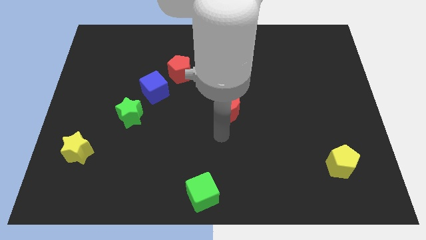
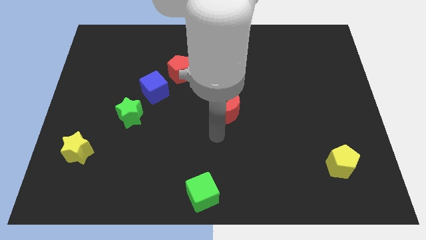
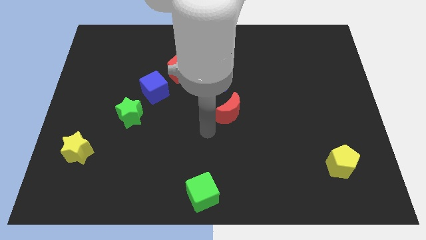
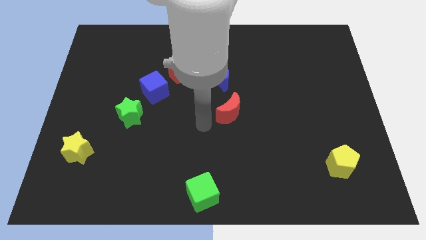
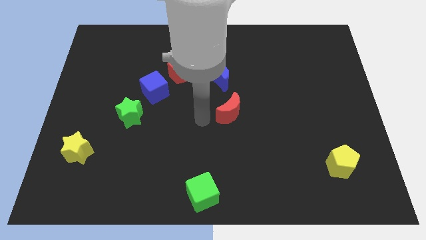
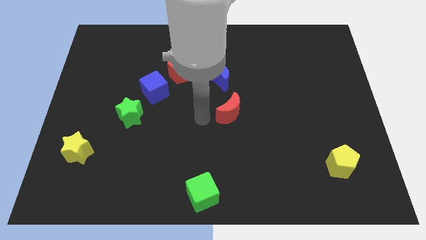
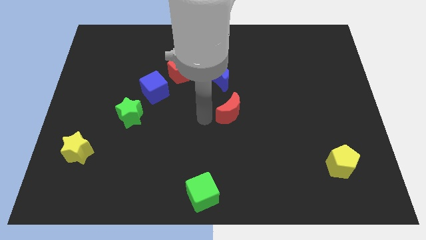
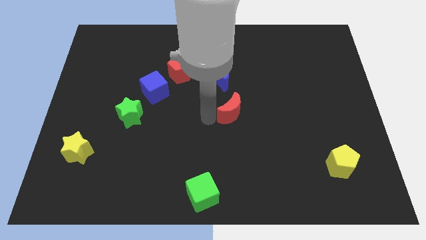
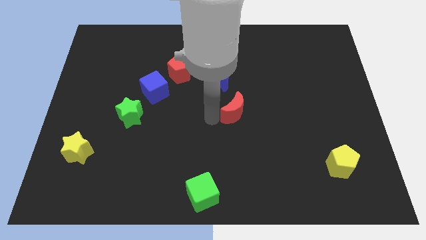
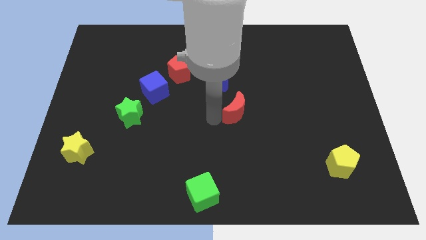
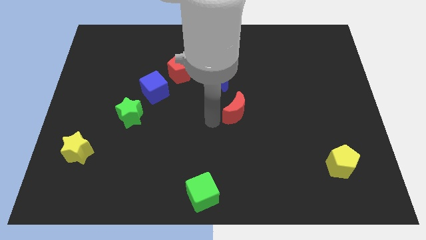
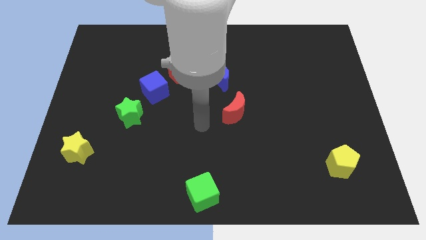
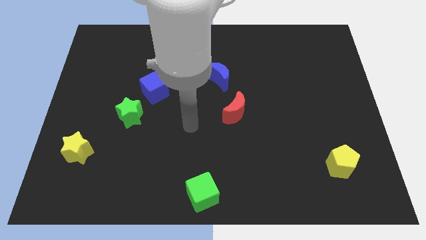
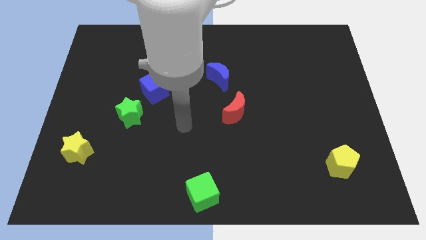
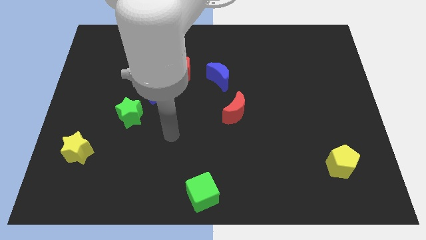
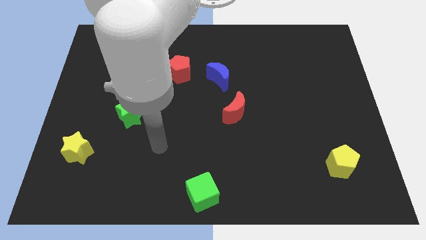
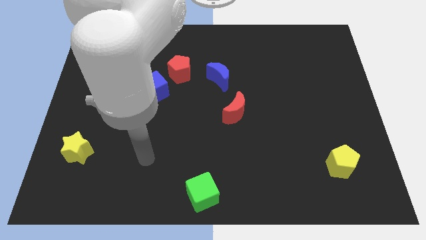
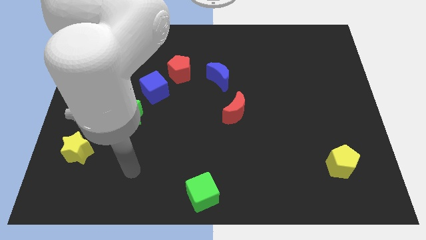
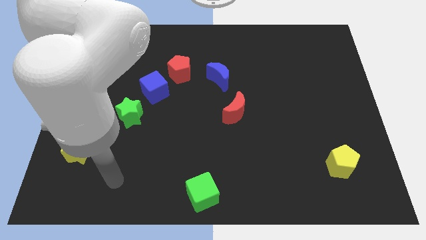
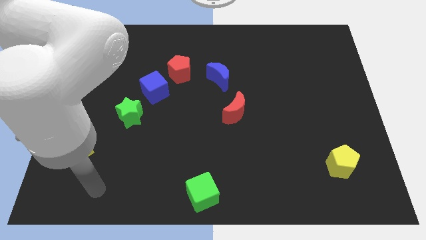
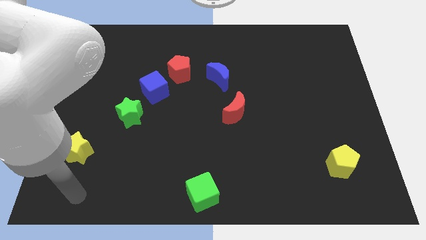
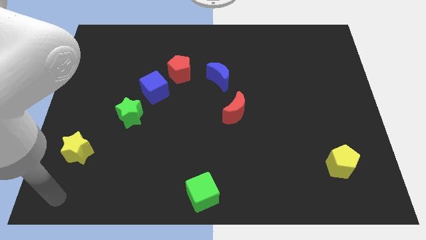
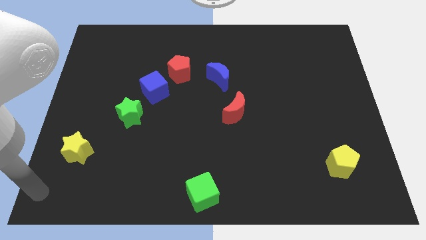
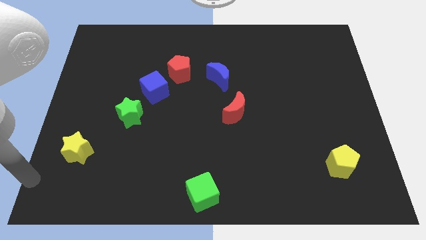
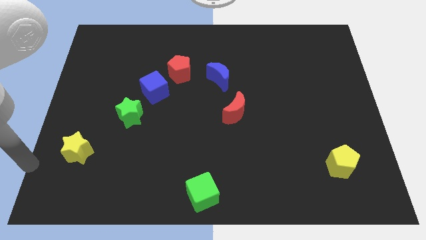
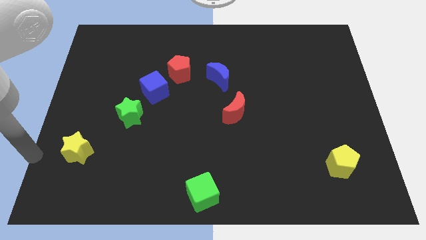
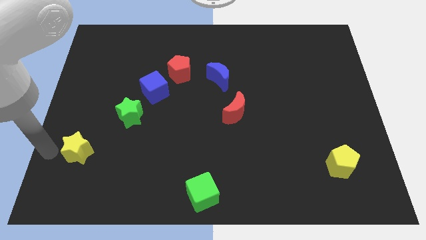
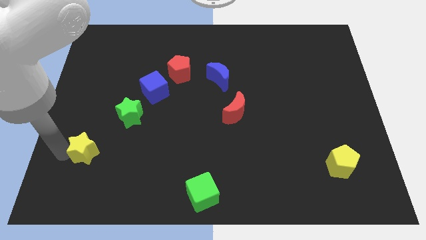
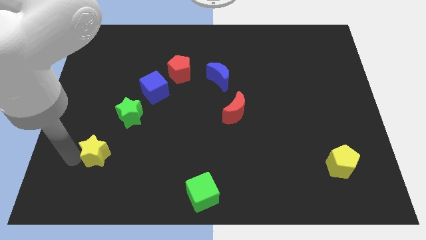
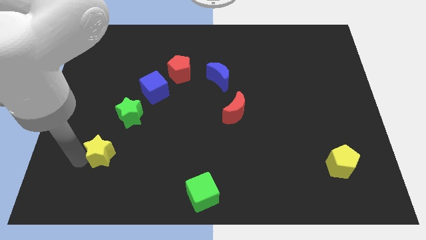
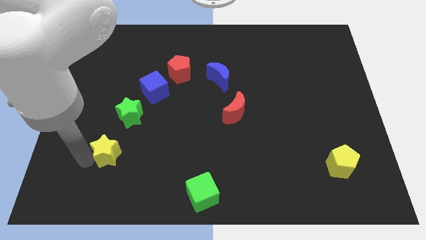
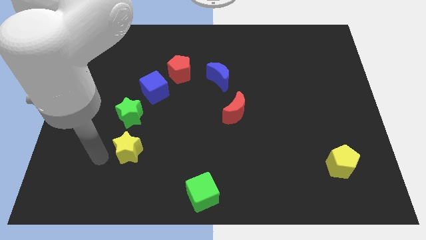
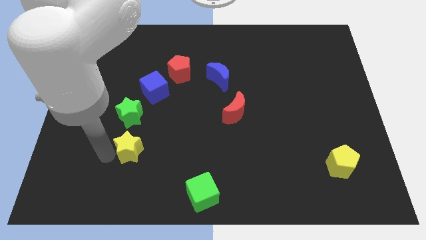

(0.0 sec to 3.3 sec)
move the yellow star vertically to the bottom of the green star

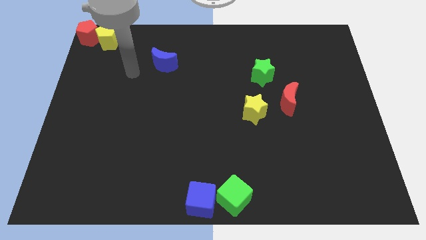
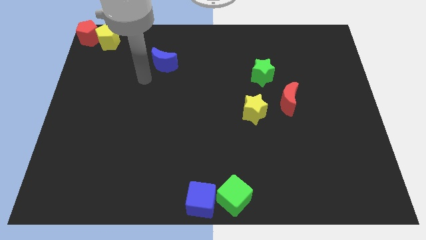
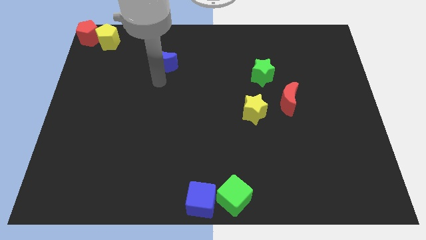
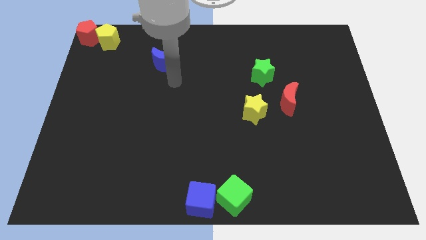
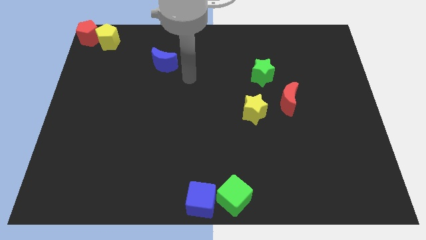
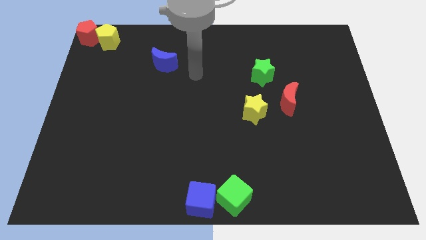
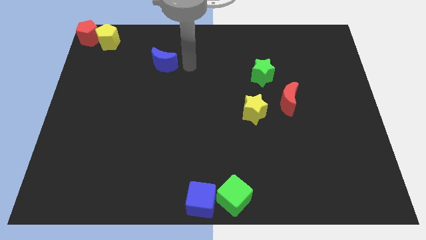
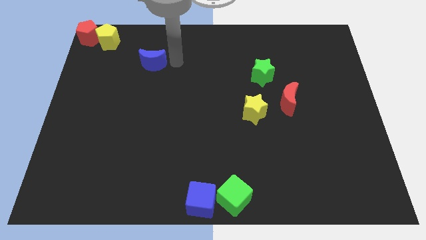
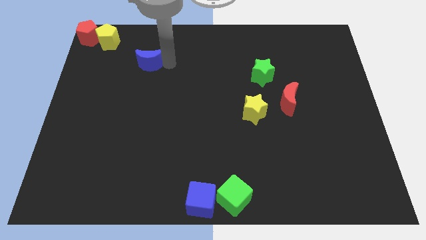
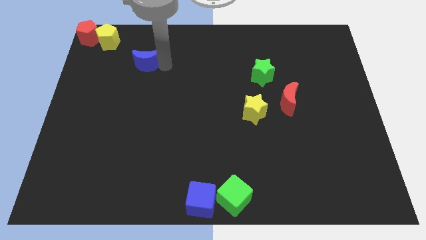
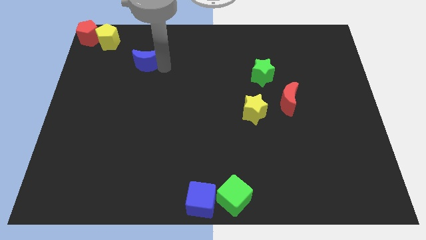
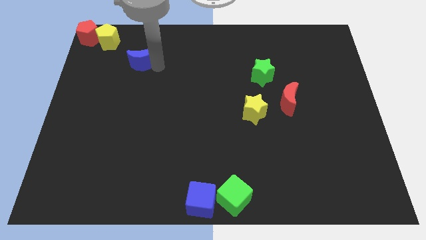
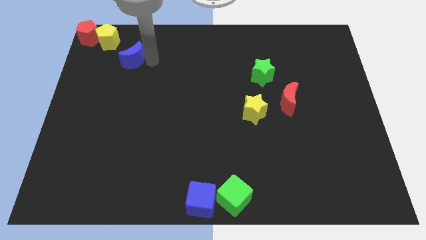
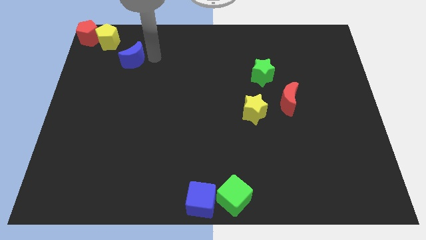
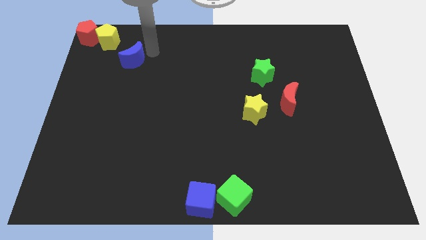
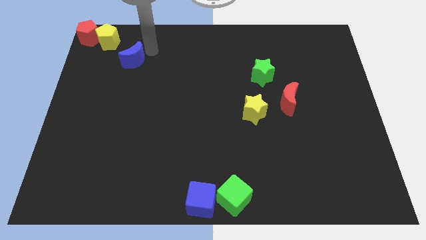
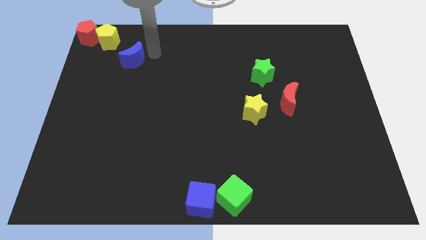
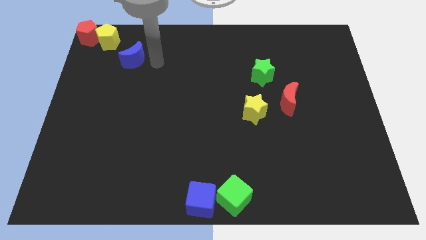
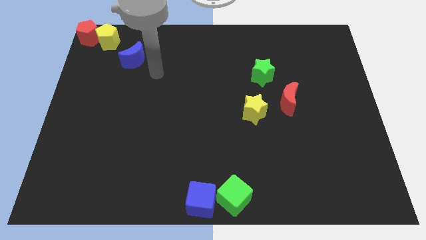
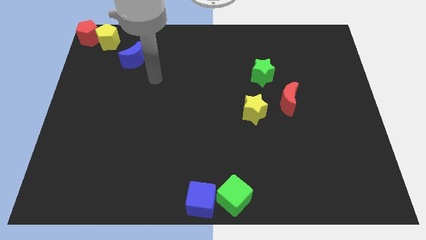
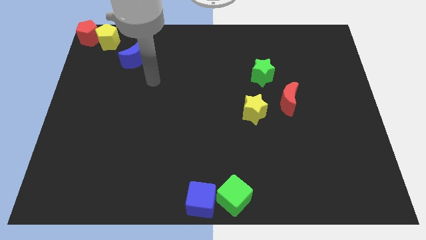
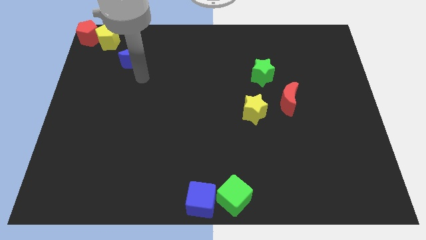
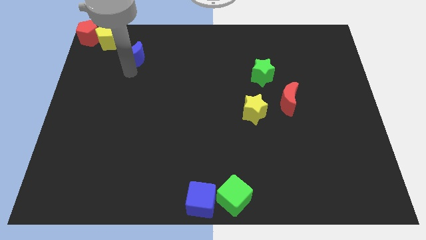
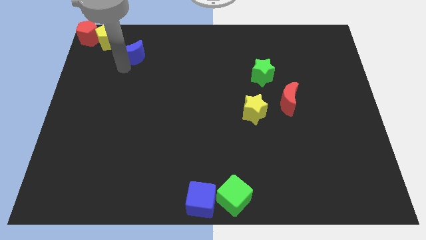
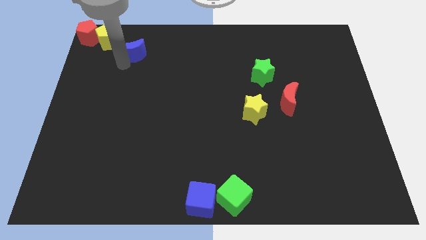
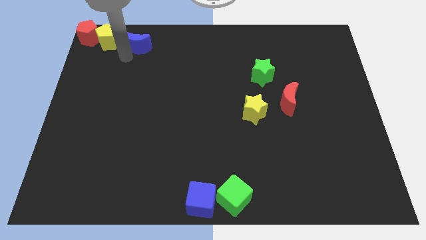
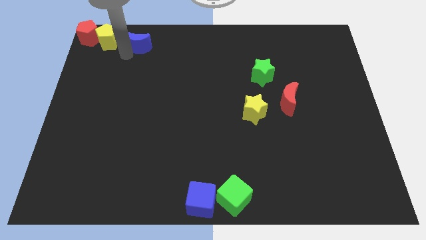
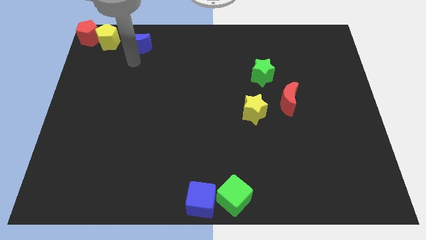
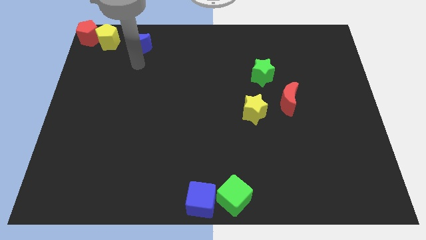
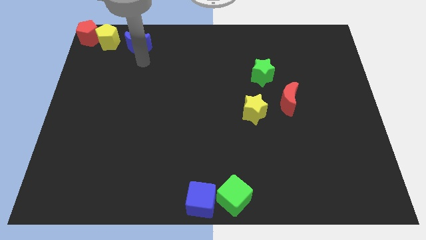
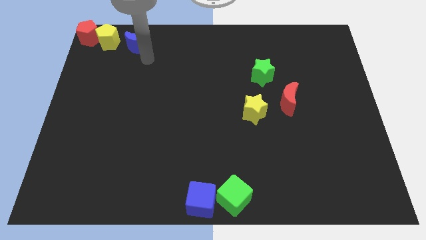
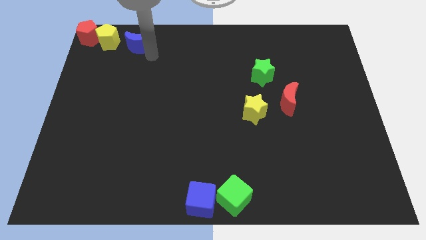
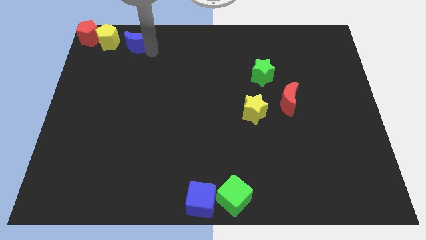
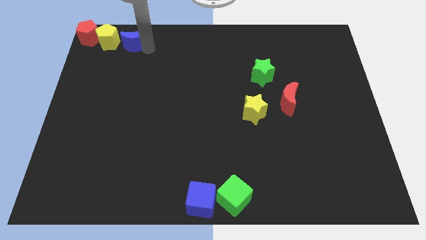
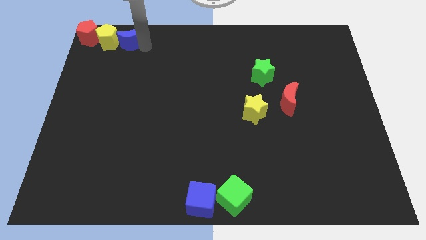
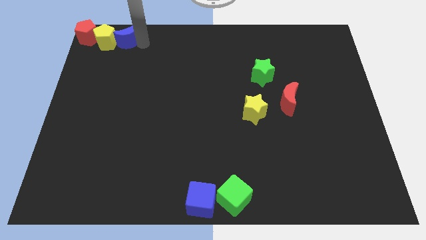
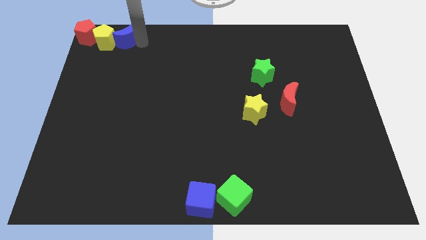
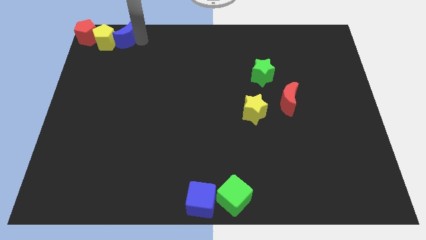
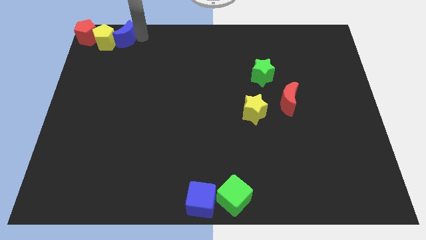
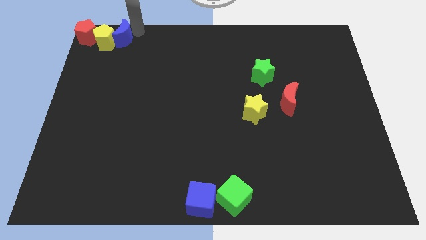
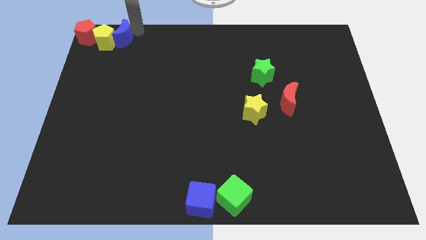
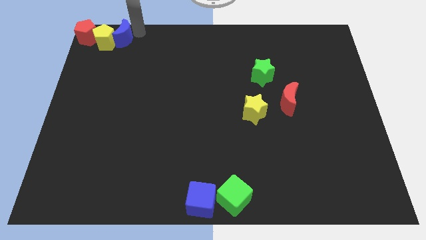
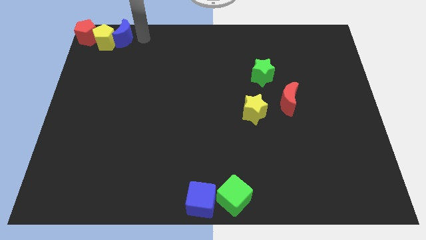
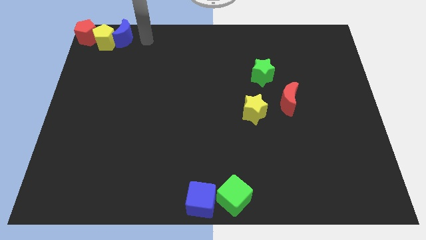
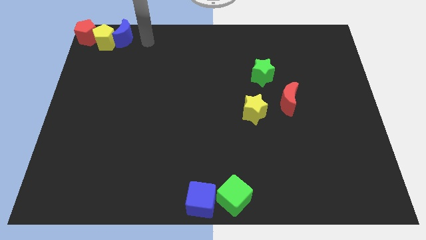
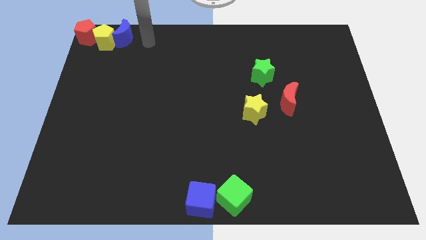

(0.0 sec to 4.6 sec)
push the blue moon to the right side of the yellow pentagon

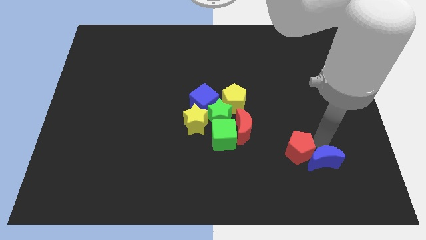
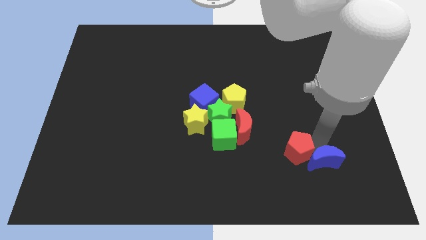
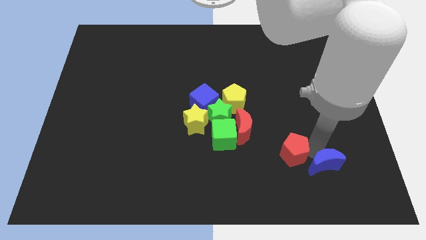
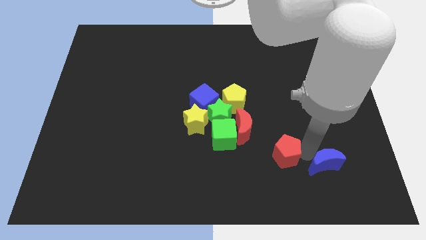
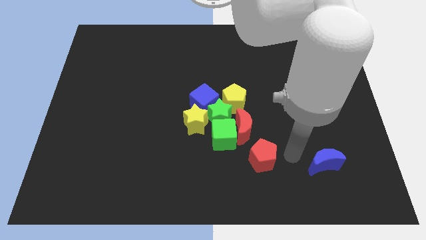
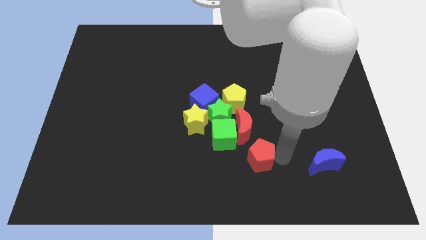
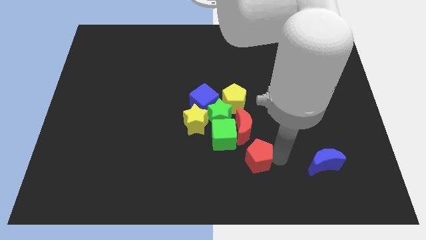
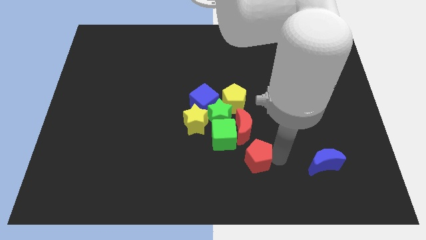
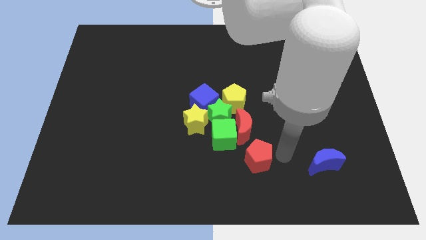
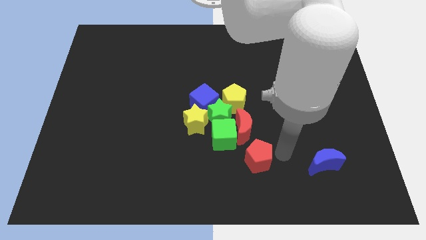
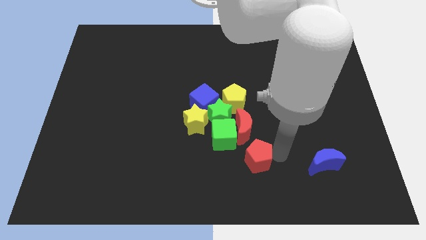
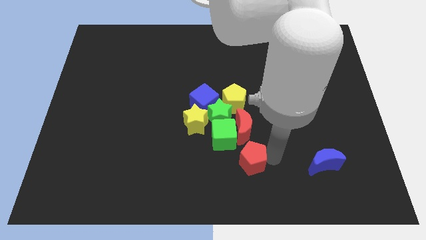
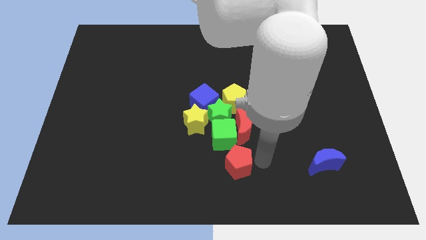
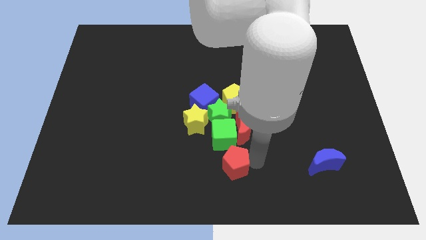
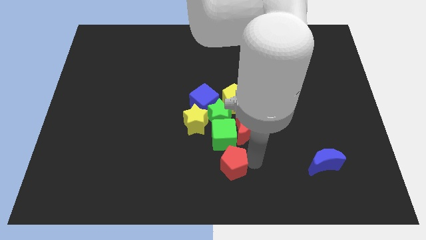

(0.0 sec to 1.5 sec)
separate red pentagon from blue moon
